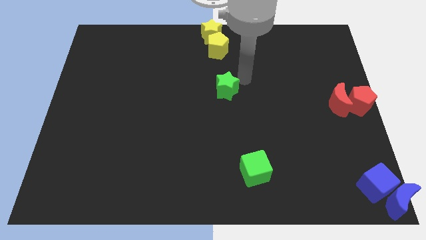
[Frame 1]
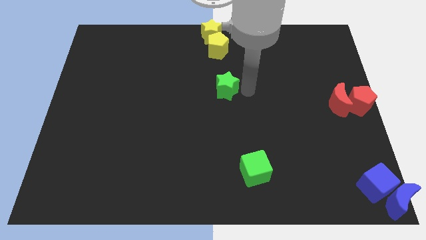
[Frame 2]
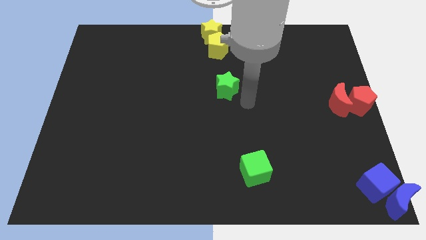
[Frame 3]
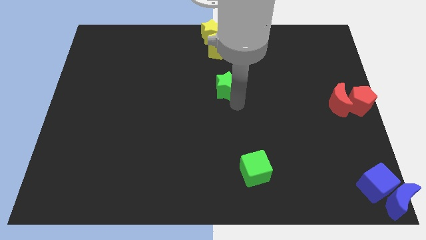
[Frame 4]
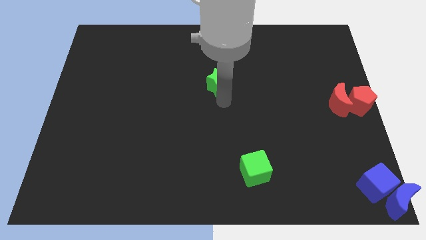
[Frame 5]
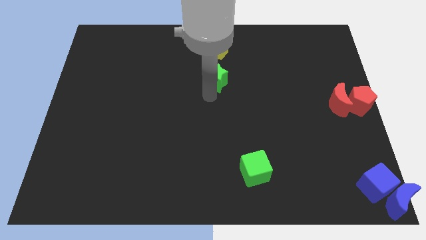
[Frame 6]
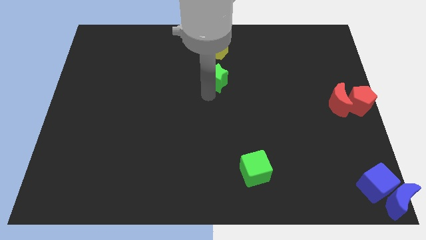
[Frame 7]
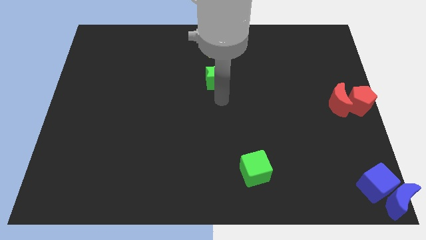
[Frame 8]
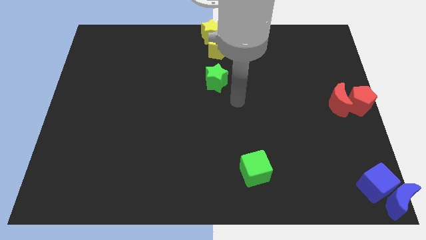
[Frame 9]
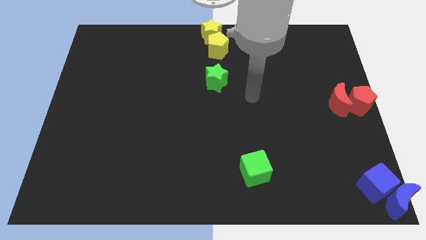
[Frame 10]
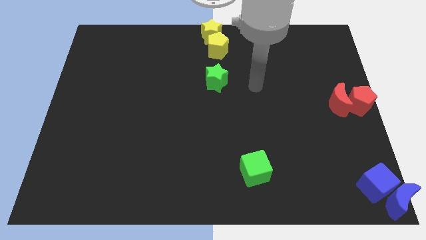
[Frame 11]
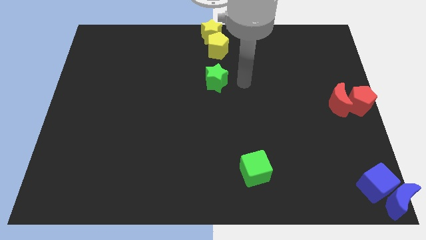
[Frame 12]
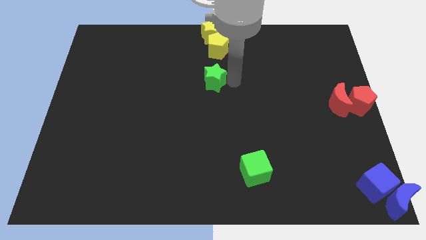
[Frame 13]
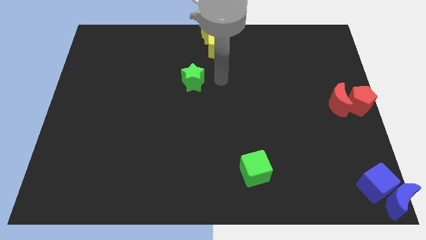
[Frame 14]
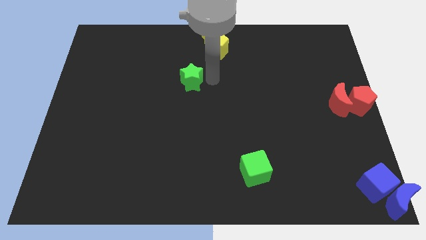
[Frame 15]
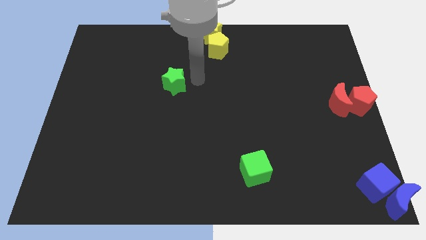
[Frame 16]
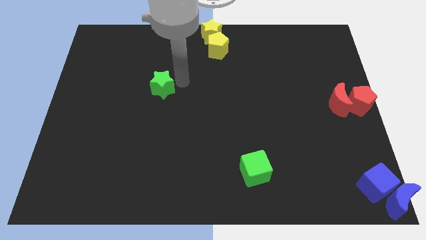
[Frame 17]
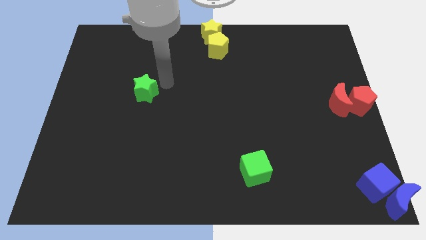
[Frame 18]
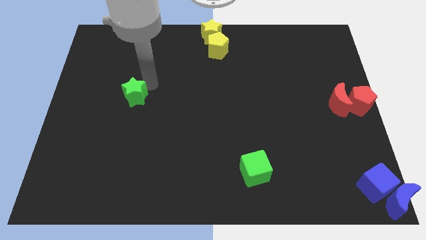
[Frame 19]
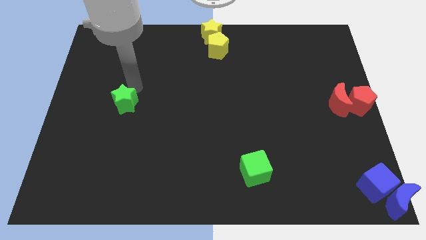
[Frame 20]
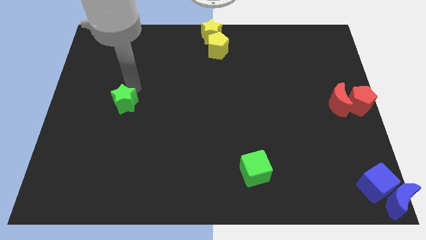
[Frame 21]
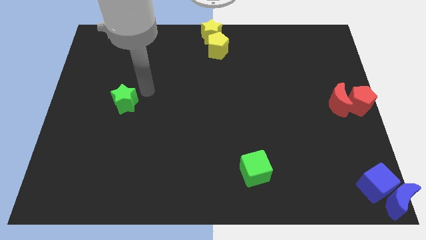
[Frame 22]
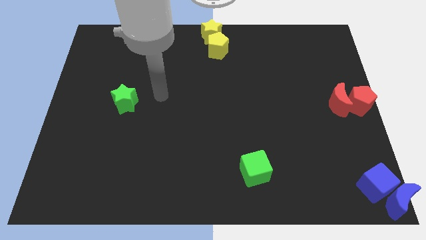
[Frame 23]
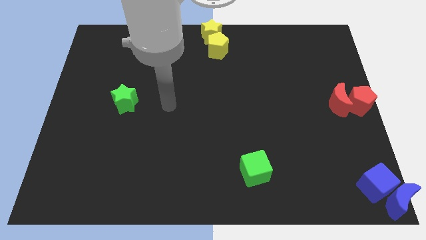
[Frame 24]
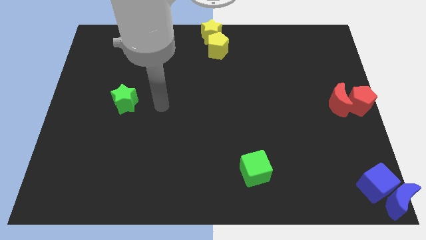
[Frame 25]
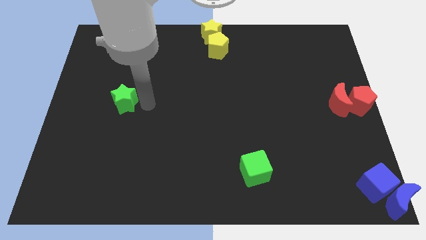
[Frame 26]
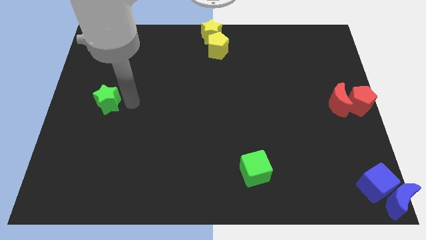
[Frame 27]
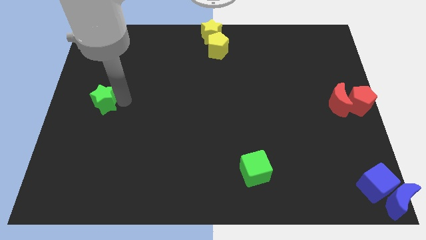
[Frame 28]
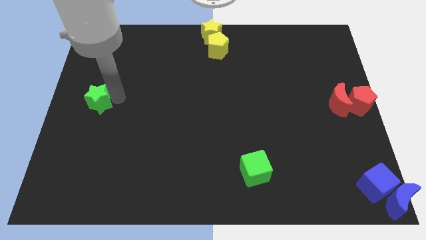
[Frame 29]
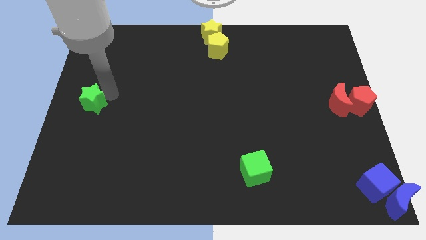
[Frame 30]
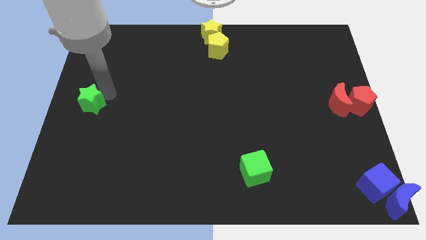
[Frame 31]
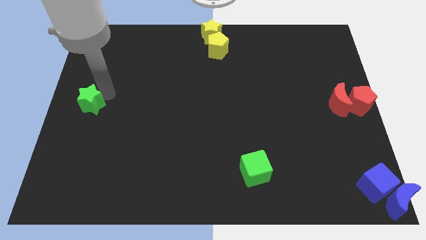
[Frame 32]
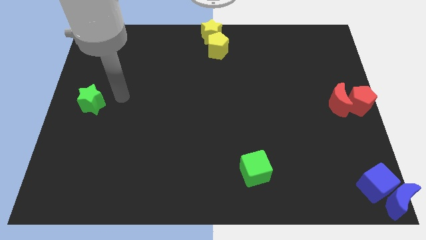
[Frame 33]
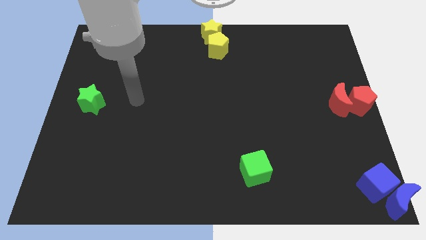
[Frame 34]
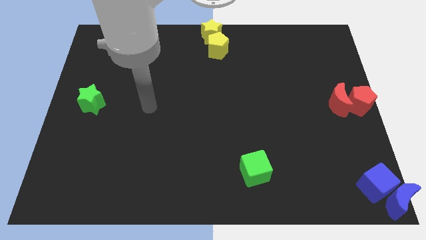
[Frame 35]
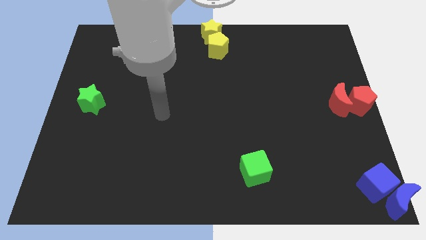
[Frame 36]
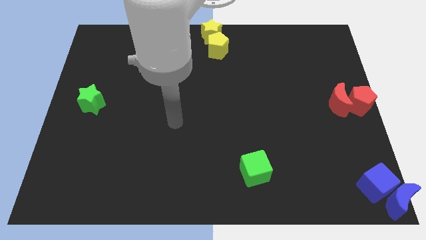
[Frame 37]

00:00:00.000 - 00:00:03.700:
slide the green star to the center left of the board

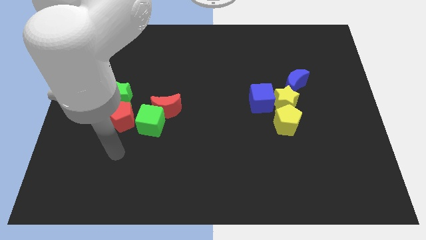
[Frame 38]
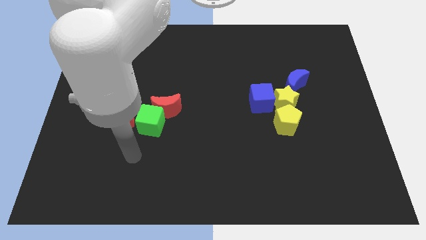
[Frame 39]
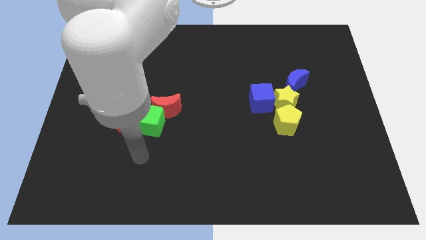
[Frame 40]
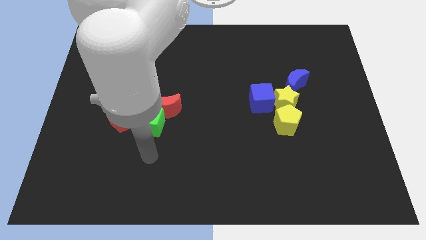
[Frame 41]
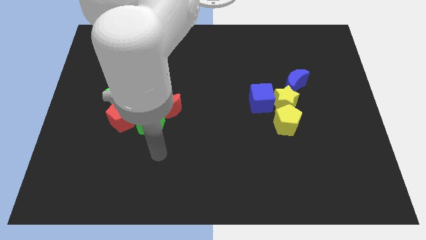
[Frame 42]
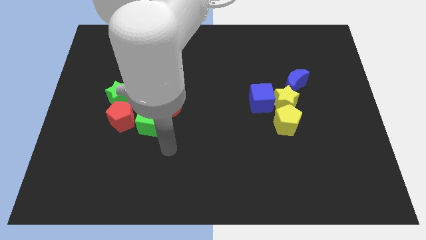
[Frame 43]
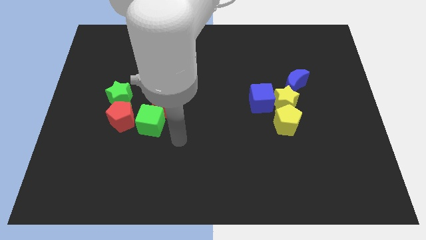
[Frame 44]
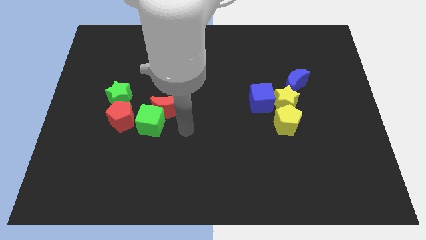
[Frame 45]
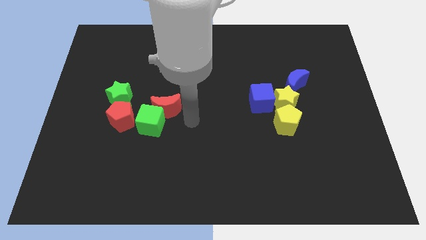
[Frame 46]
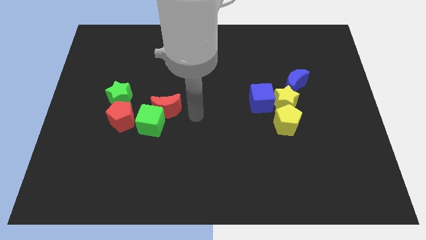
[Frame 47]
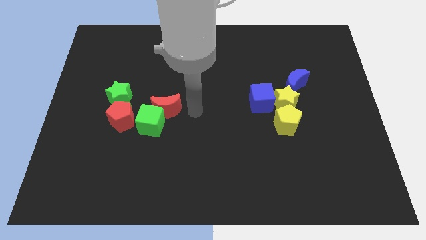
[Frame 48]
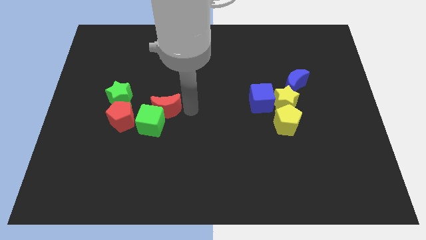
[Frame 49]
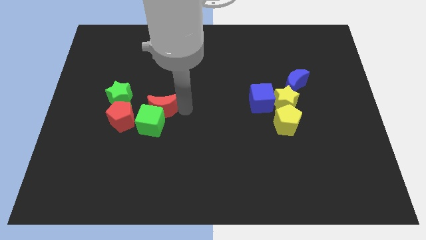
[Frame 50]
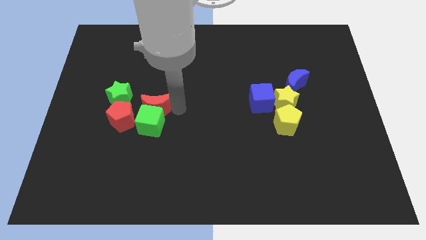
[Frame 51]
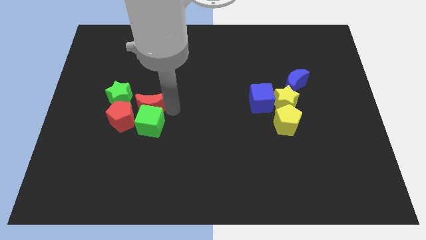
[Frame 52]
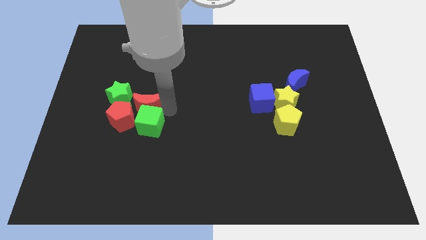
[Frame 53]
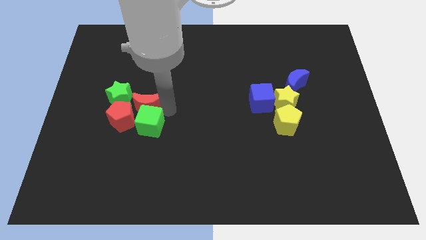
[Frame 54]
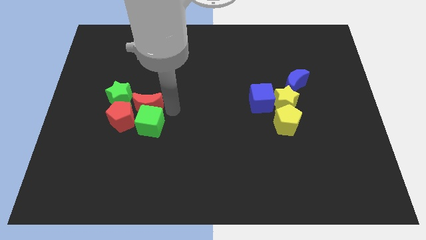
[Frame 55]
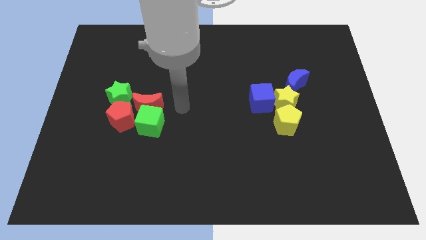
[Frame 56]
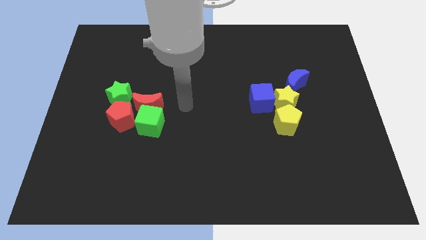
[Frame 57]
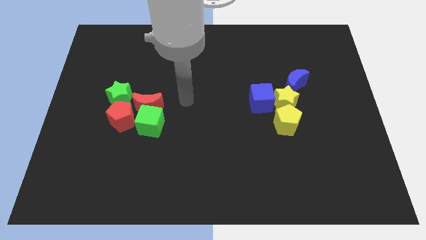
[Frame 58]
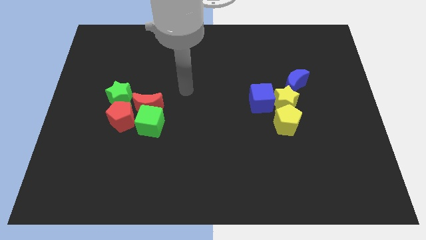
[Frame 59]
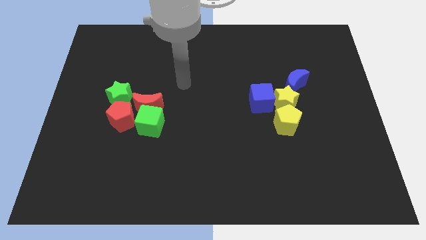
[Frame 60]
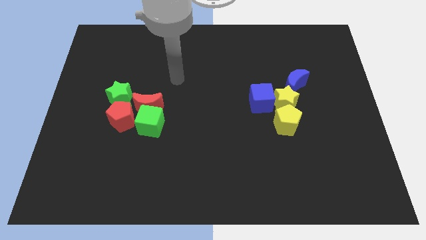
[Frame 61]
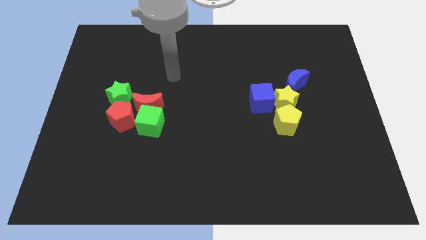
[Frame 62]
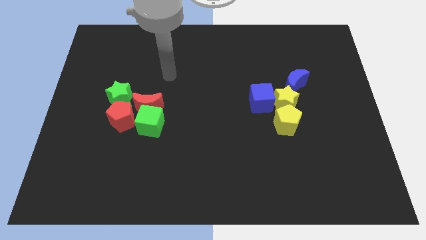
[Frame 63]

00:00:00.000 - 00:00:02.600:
move the red crescent to the top of the green cube

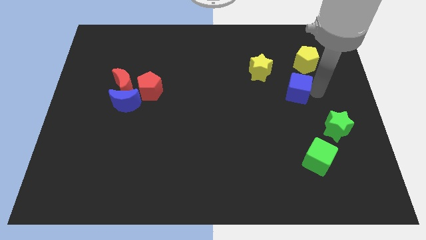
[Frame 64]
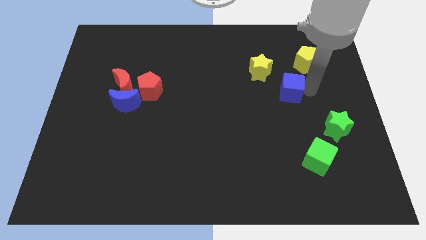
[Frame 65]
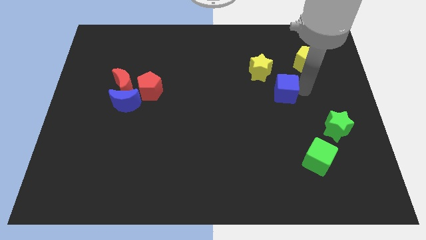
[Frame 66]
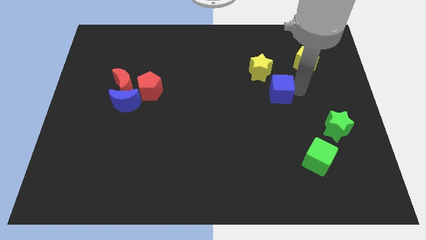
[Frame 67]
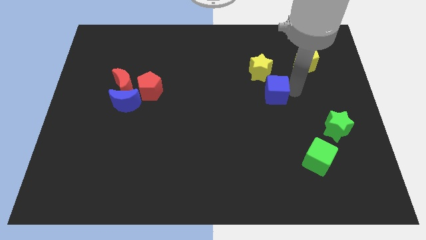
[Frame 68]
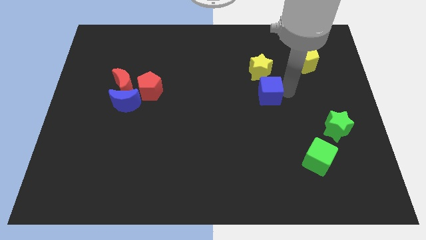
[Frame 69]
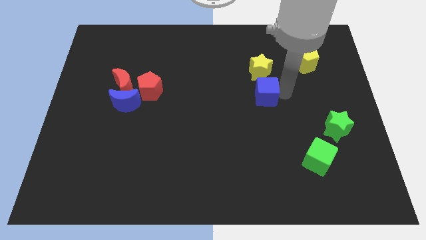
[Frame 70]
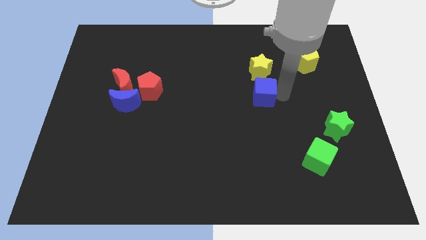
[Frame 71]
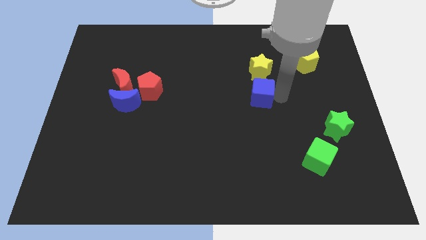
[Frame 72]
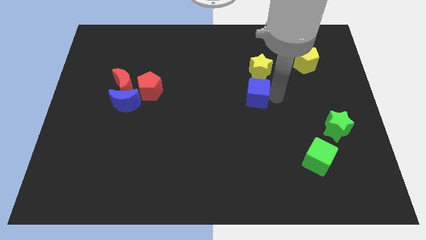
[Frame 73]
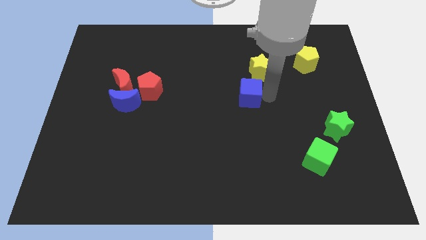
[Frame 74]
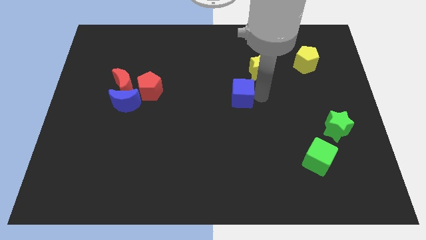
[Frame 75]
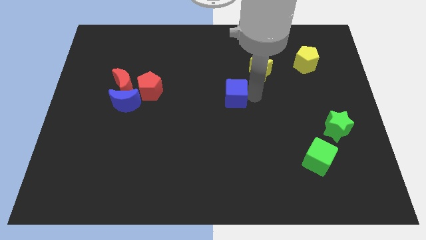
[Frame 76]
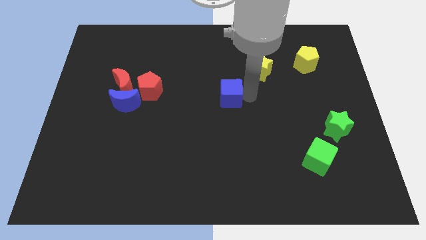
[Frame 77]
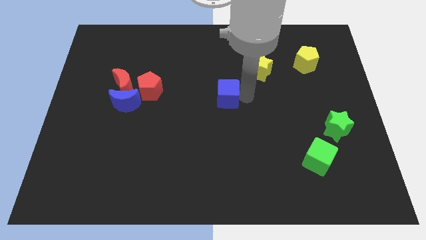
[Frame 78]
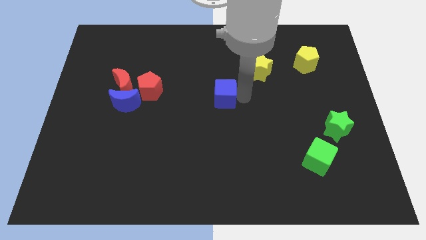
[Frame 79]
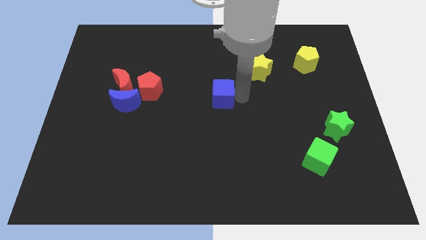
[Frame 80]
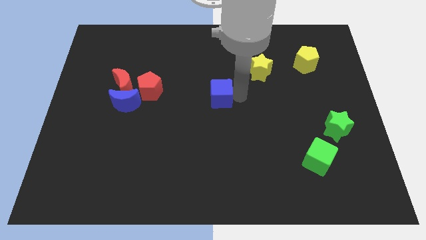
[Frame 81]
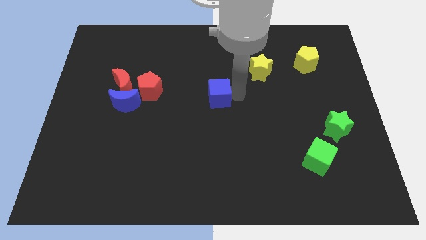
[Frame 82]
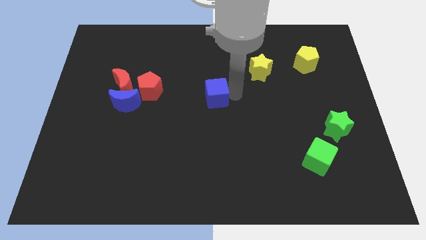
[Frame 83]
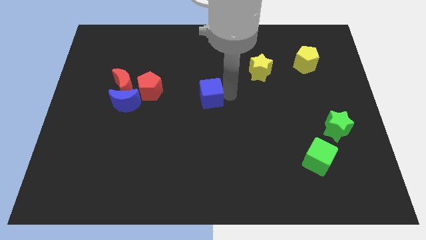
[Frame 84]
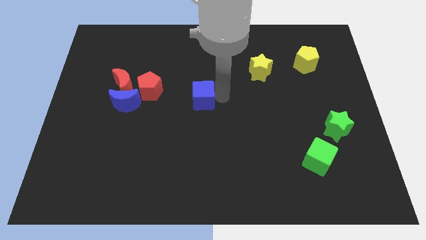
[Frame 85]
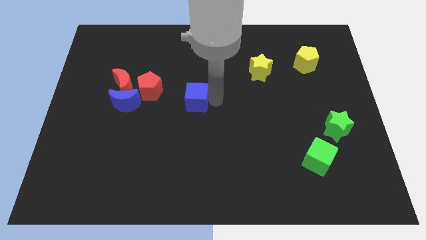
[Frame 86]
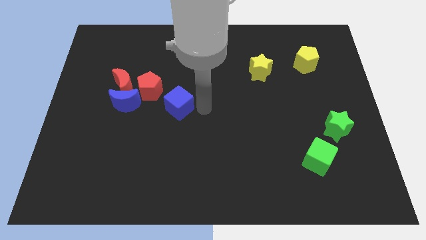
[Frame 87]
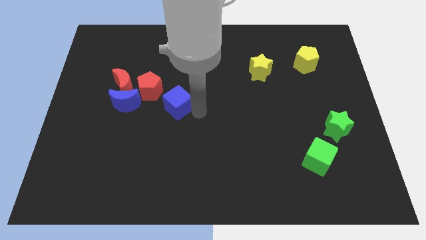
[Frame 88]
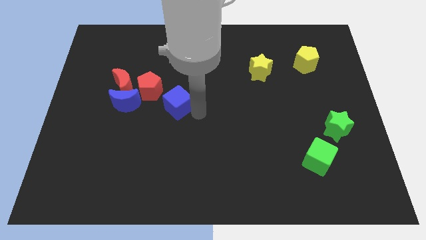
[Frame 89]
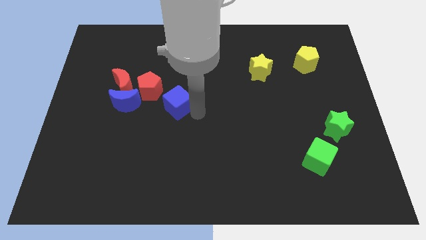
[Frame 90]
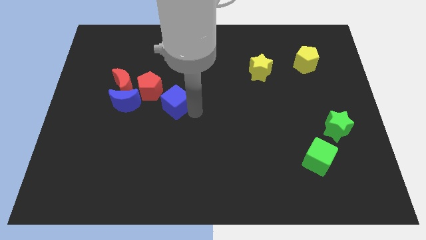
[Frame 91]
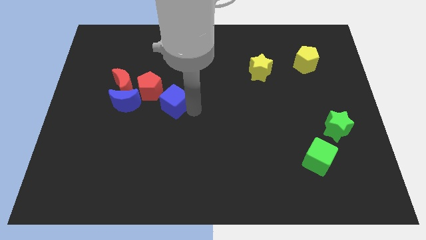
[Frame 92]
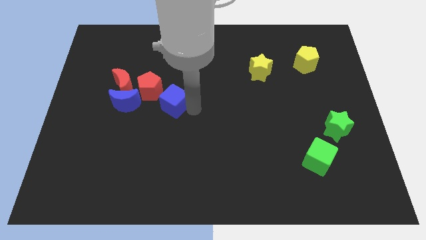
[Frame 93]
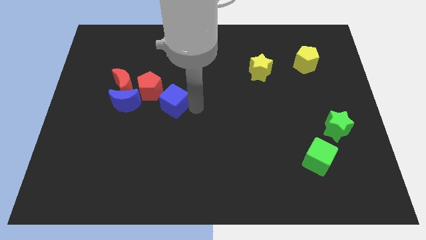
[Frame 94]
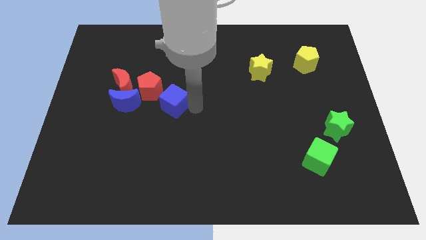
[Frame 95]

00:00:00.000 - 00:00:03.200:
push blue cube towards blue moon
